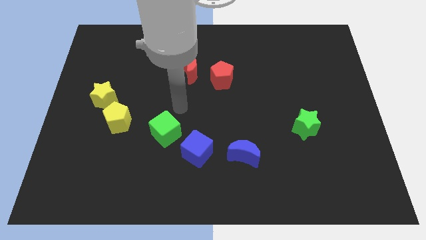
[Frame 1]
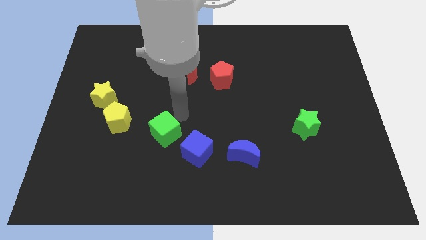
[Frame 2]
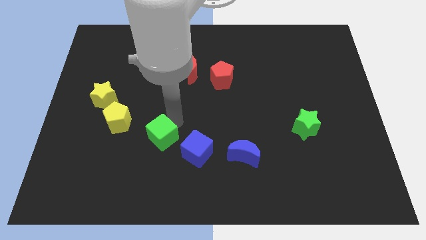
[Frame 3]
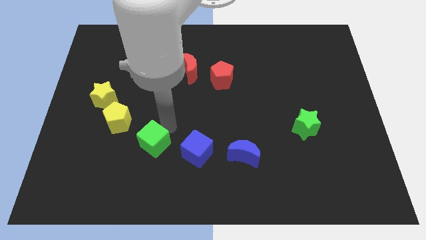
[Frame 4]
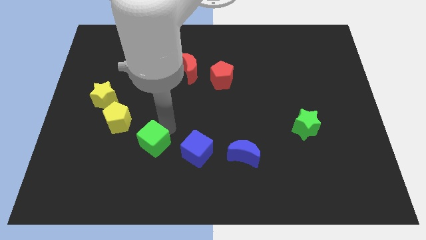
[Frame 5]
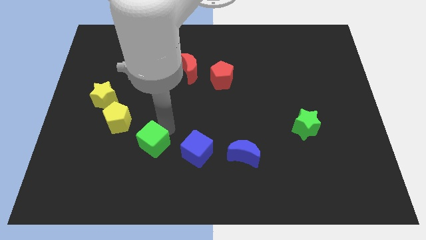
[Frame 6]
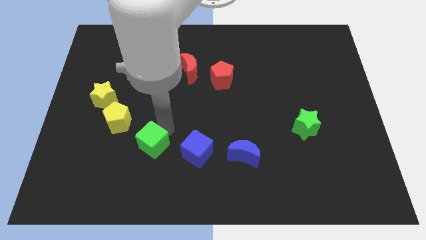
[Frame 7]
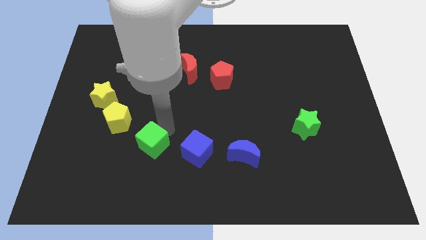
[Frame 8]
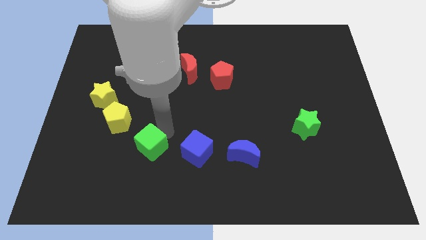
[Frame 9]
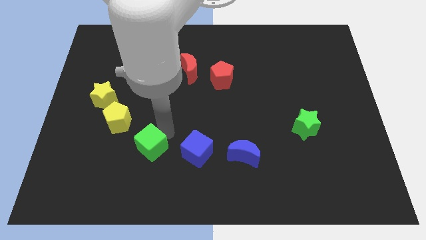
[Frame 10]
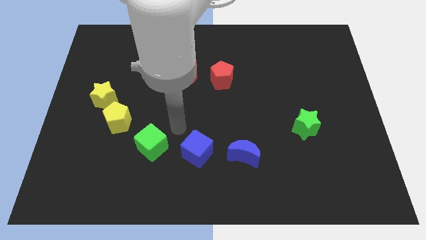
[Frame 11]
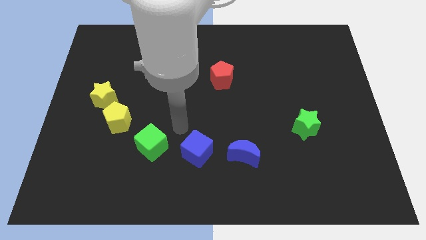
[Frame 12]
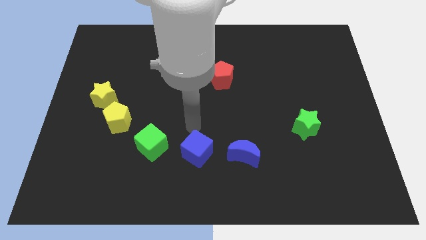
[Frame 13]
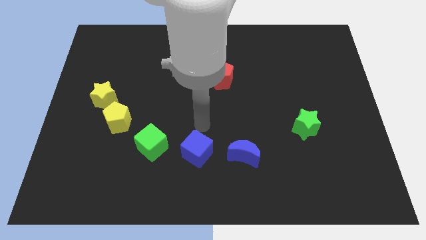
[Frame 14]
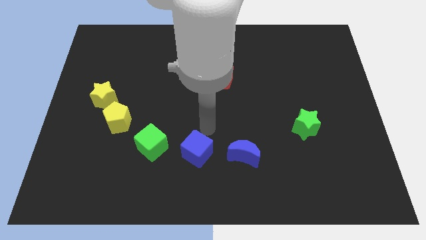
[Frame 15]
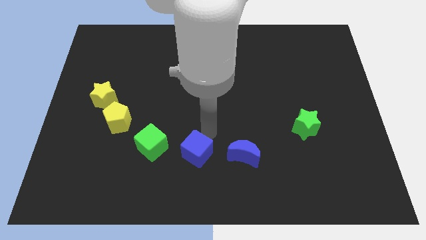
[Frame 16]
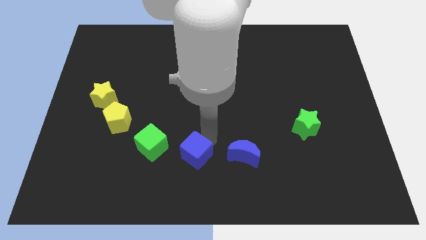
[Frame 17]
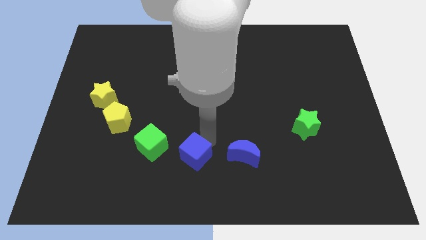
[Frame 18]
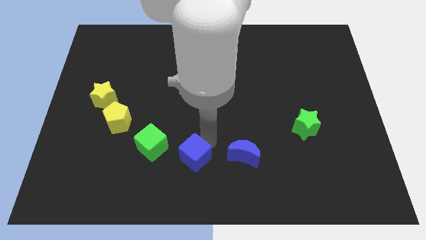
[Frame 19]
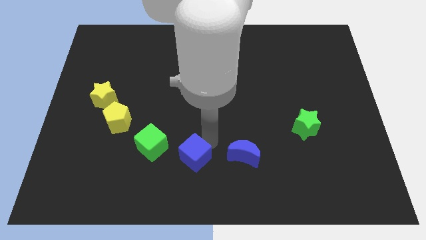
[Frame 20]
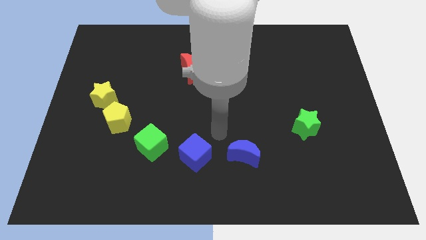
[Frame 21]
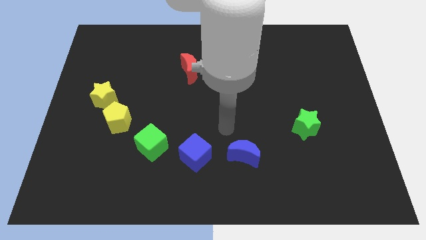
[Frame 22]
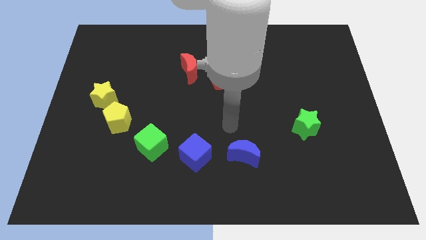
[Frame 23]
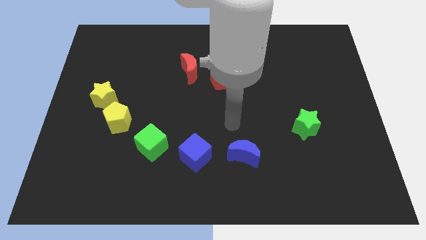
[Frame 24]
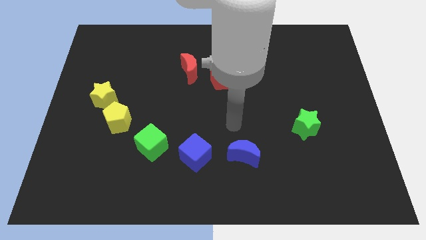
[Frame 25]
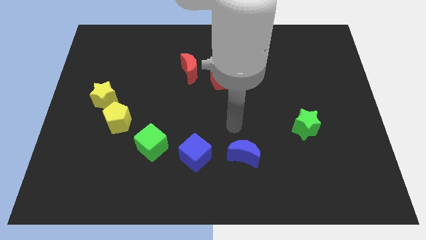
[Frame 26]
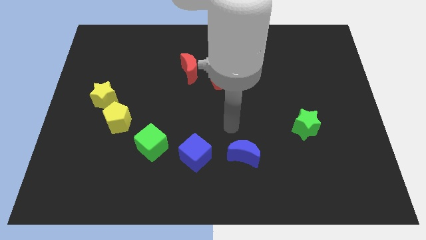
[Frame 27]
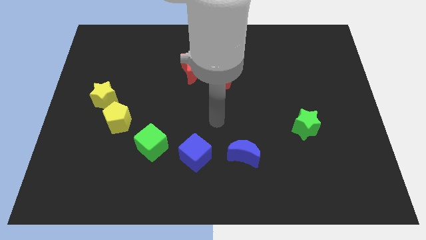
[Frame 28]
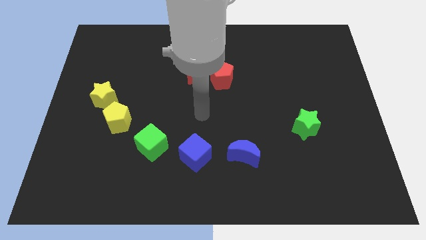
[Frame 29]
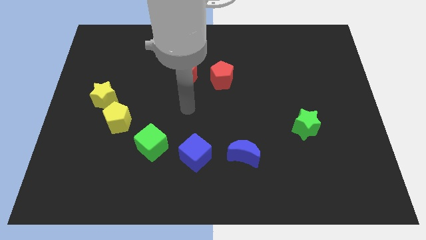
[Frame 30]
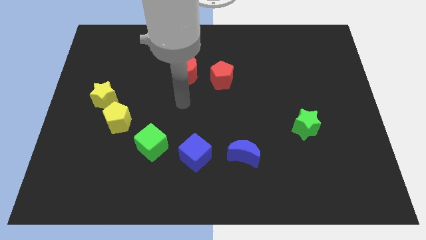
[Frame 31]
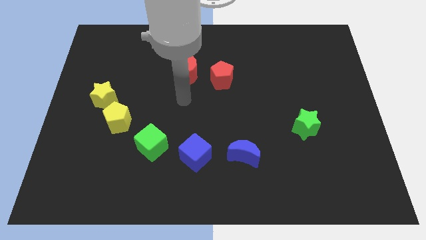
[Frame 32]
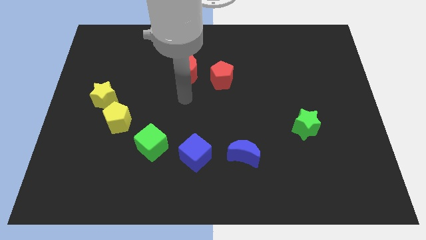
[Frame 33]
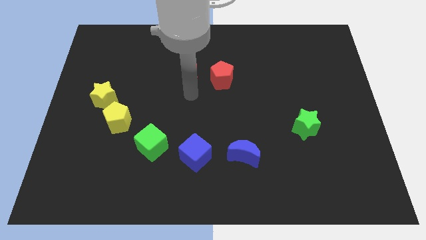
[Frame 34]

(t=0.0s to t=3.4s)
place your arm below red moon

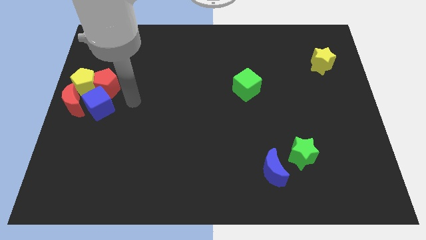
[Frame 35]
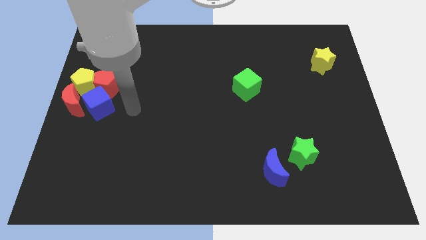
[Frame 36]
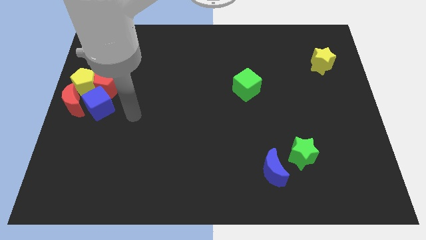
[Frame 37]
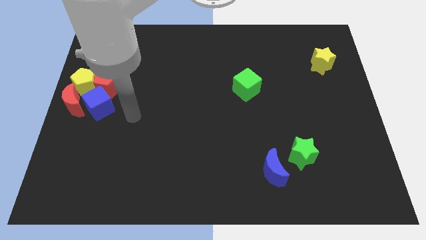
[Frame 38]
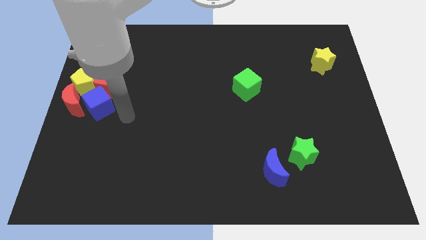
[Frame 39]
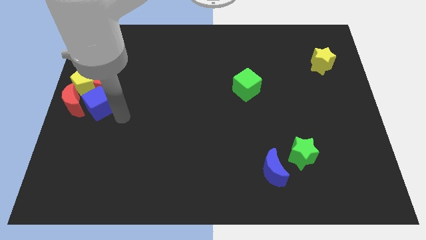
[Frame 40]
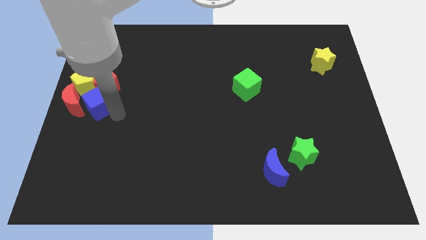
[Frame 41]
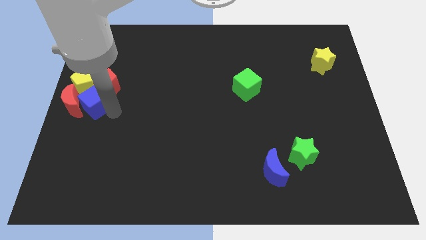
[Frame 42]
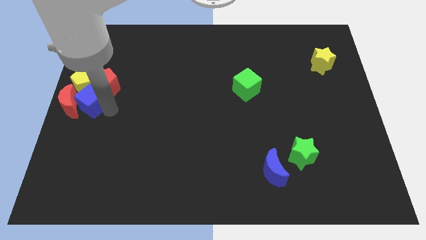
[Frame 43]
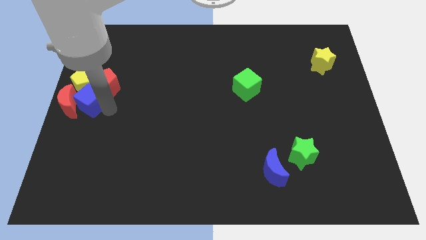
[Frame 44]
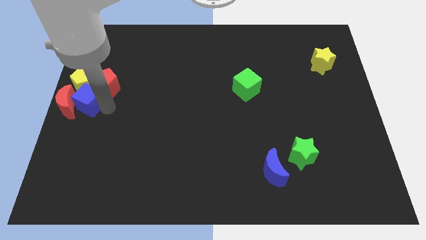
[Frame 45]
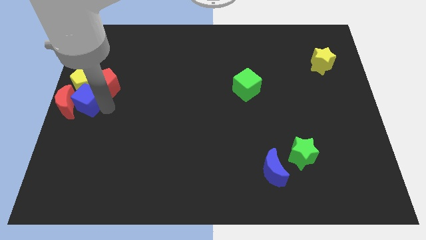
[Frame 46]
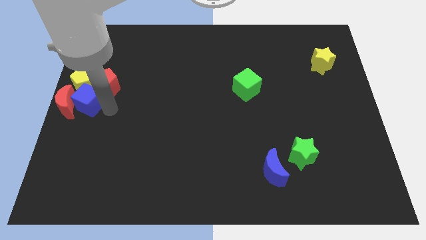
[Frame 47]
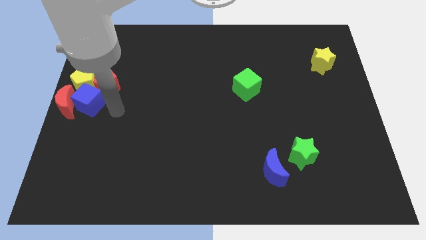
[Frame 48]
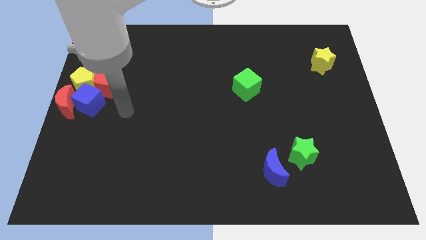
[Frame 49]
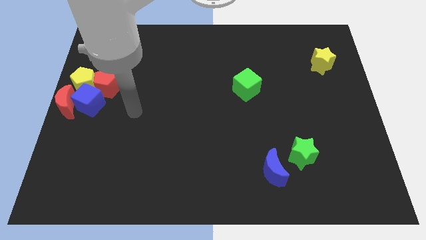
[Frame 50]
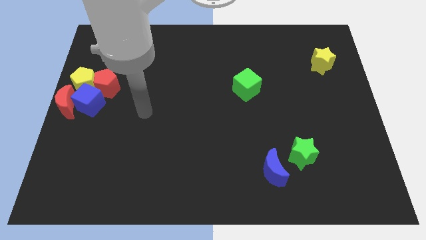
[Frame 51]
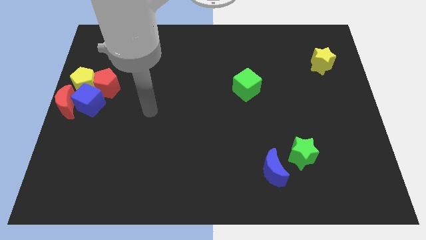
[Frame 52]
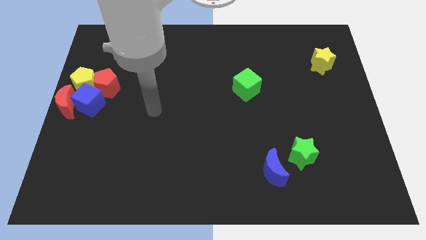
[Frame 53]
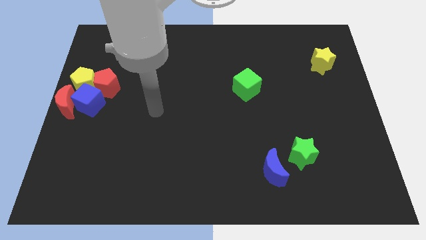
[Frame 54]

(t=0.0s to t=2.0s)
push the blue cube into the red crescent

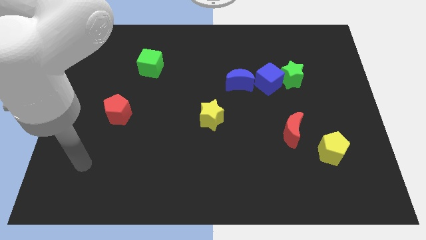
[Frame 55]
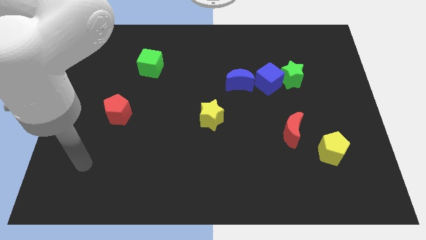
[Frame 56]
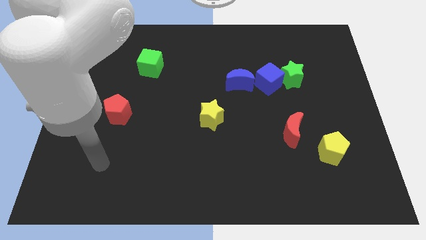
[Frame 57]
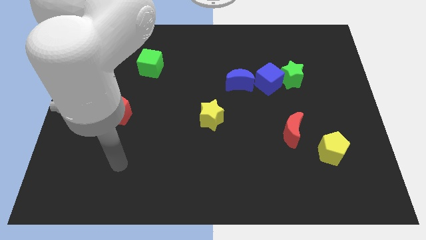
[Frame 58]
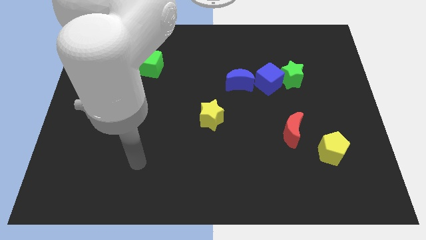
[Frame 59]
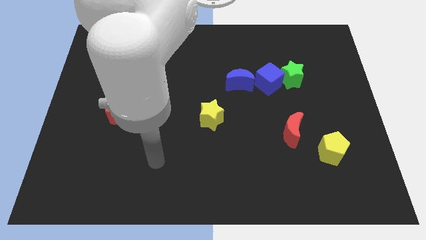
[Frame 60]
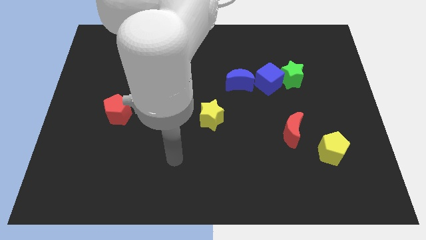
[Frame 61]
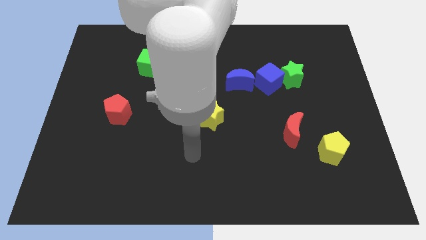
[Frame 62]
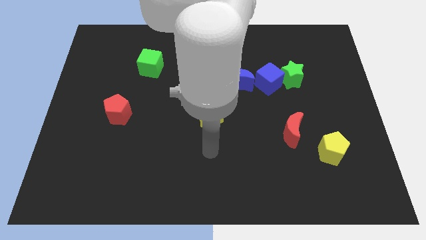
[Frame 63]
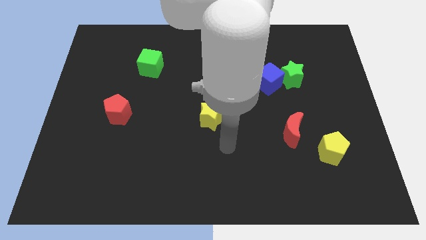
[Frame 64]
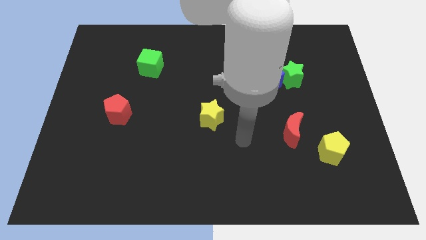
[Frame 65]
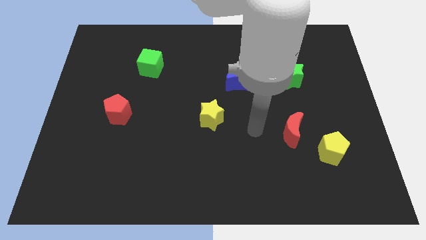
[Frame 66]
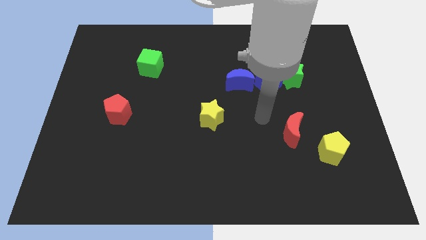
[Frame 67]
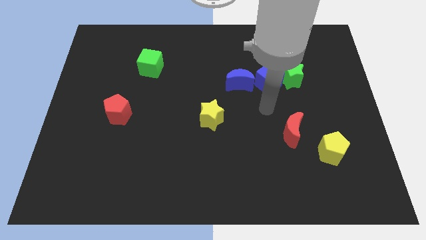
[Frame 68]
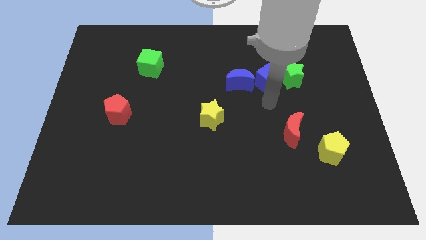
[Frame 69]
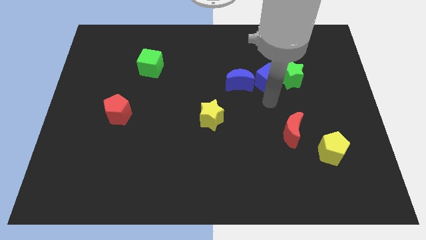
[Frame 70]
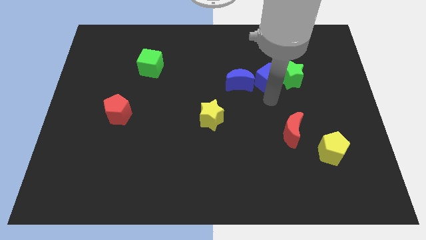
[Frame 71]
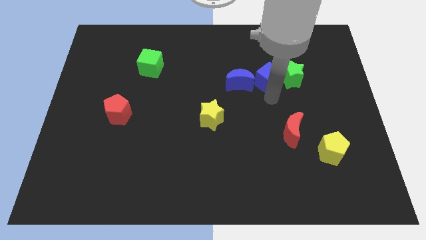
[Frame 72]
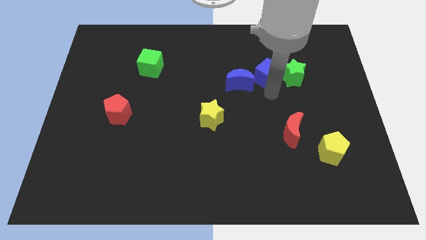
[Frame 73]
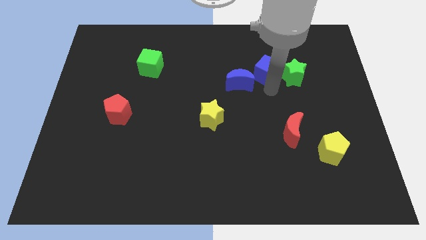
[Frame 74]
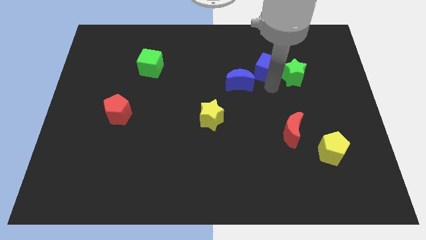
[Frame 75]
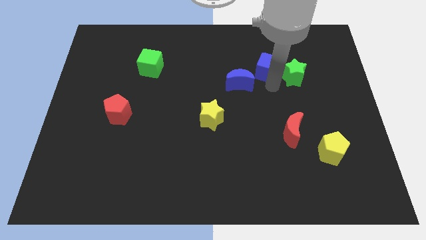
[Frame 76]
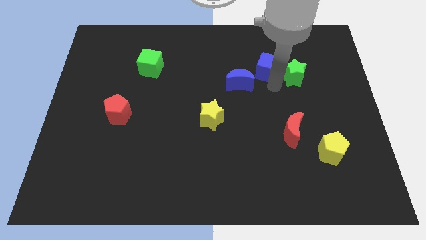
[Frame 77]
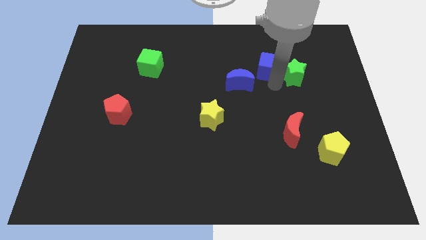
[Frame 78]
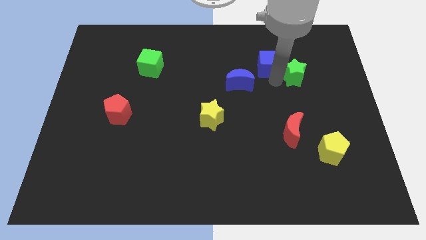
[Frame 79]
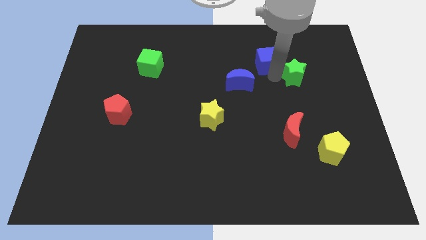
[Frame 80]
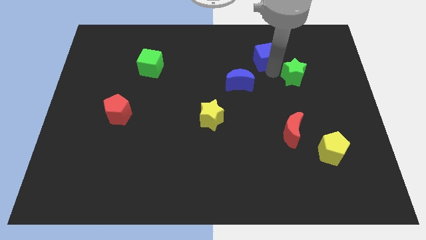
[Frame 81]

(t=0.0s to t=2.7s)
push the blue cube slightly to the top

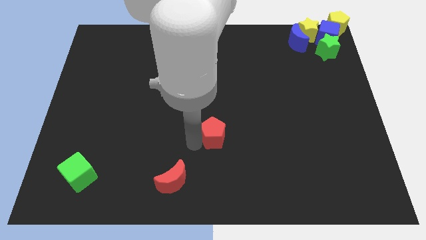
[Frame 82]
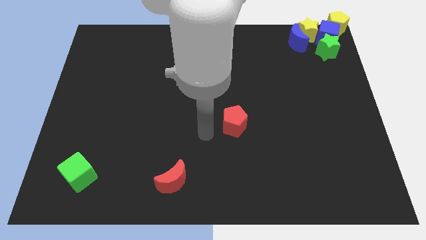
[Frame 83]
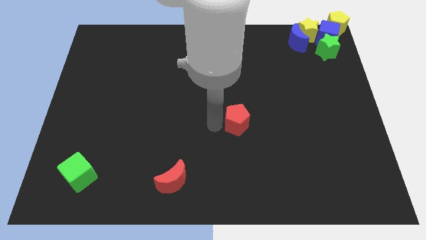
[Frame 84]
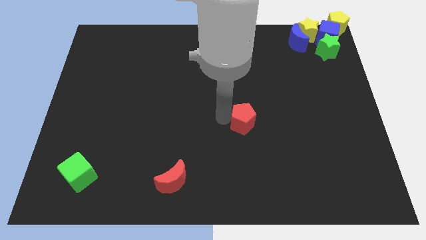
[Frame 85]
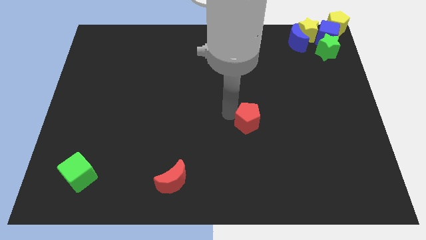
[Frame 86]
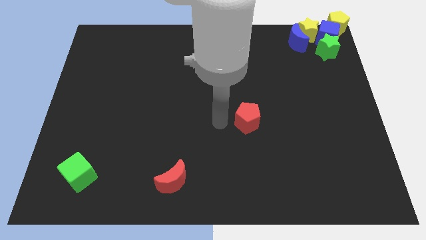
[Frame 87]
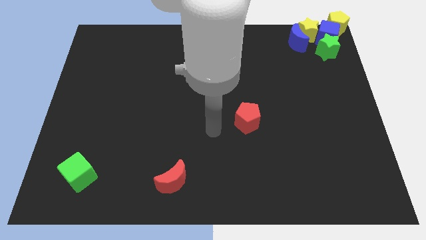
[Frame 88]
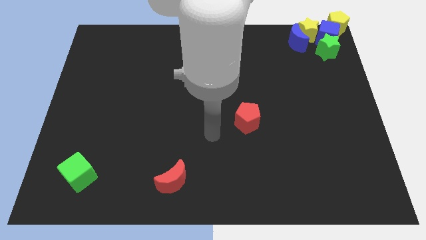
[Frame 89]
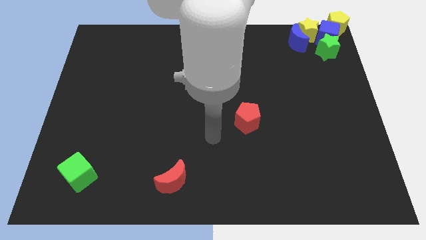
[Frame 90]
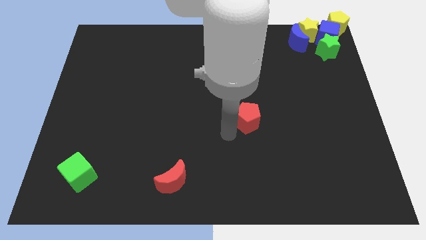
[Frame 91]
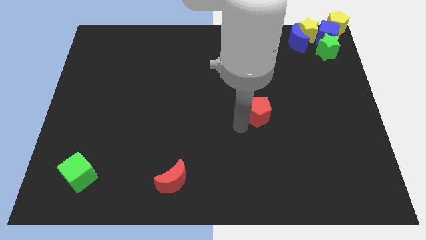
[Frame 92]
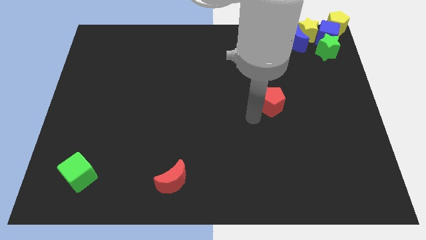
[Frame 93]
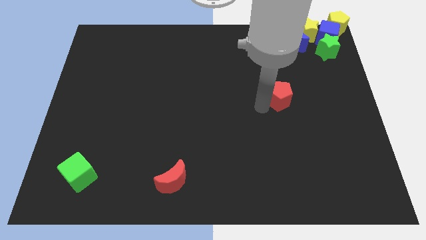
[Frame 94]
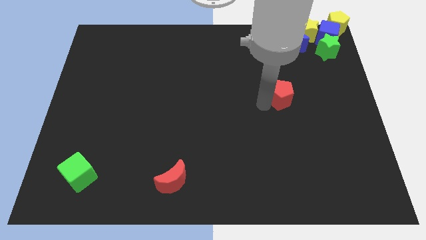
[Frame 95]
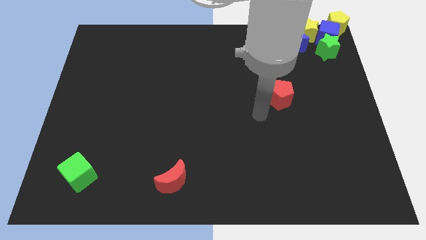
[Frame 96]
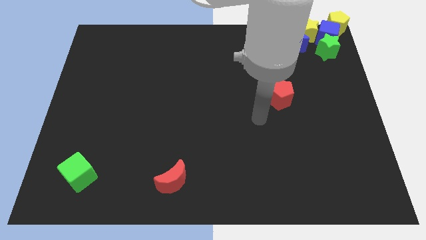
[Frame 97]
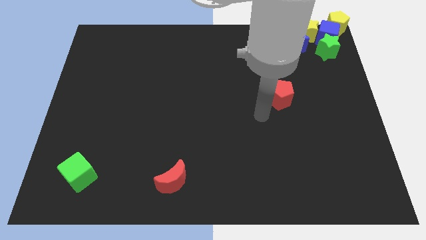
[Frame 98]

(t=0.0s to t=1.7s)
slide the red pentagon towards the green star
